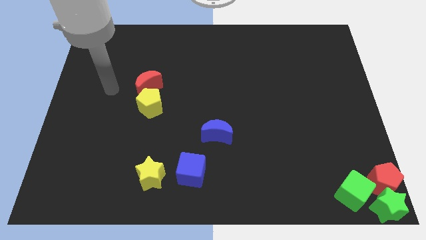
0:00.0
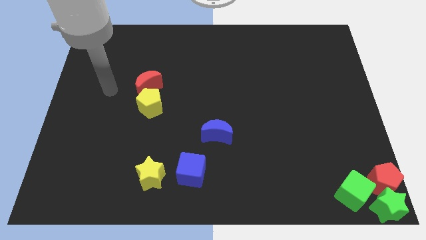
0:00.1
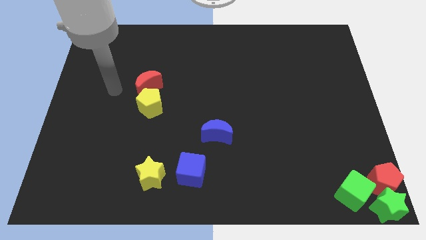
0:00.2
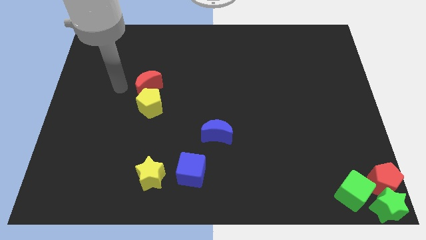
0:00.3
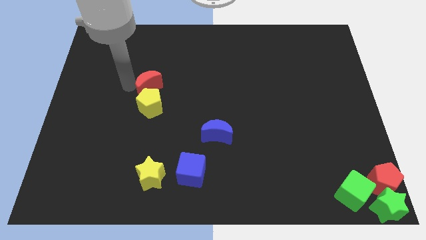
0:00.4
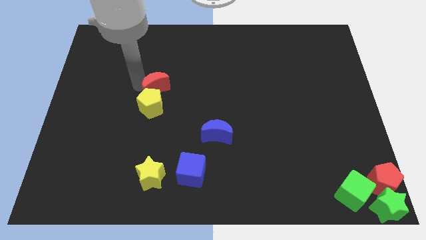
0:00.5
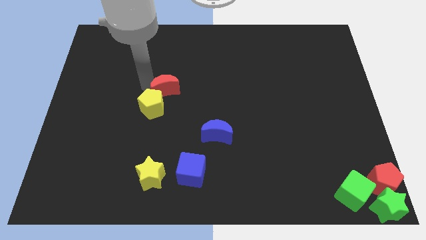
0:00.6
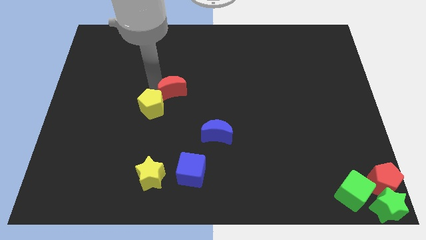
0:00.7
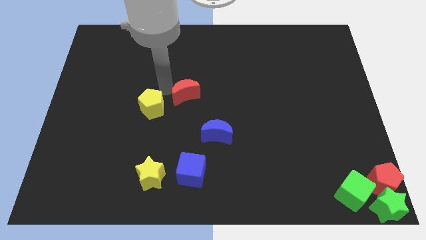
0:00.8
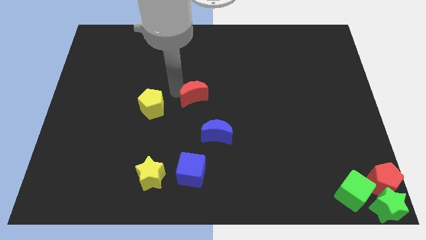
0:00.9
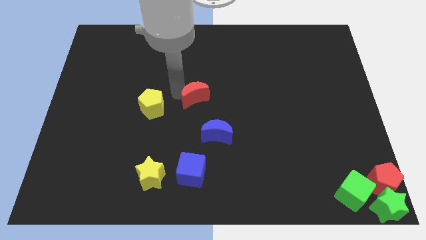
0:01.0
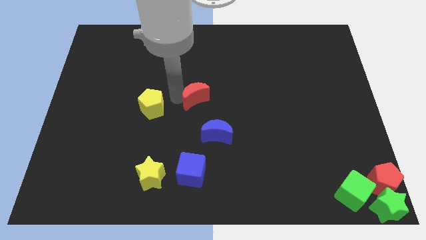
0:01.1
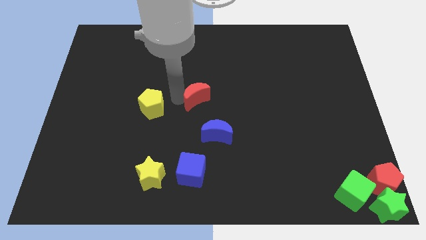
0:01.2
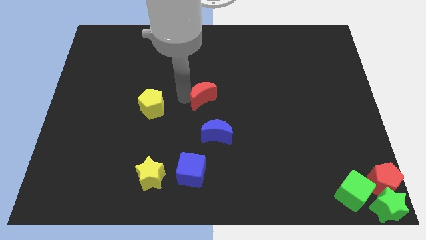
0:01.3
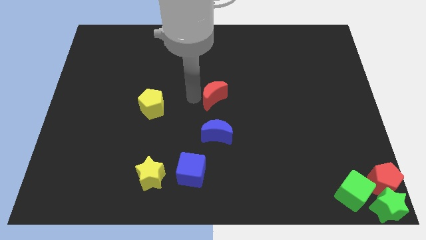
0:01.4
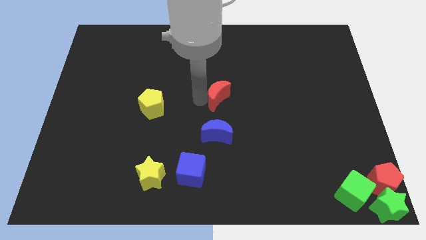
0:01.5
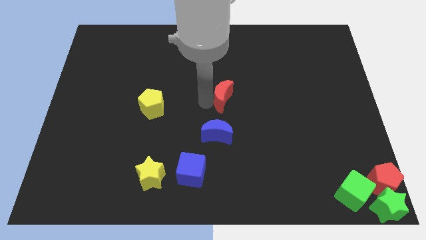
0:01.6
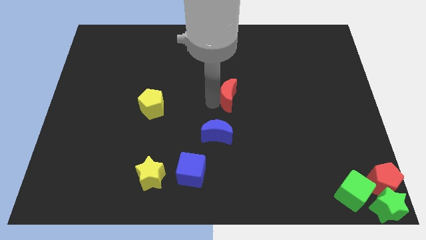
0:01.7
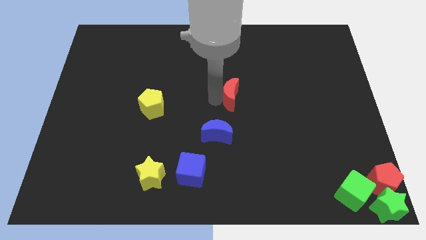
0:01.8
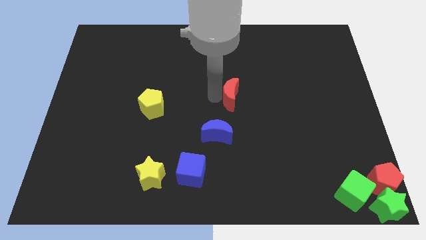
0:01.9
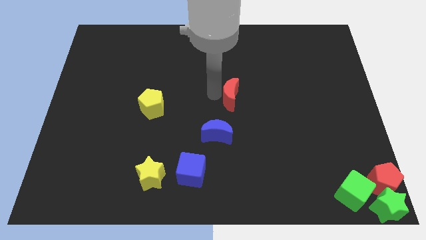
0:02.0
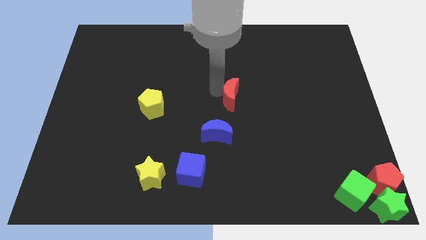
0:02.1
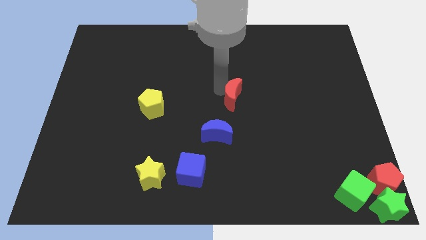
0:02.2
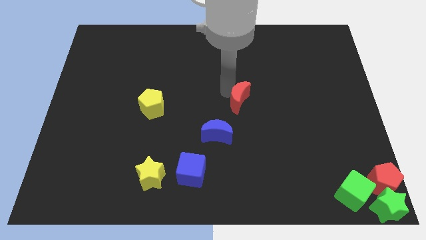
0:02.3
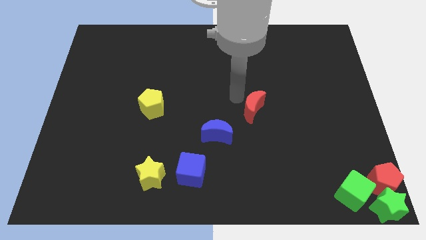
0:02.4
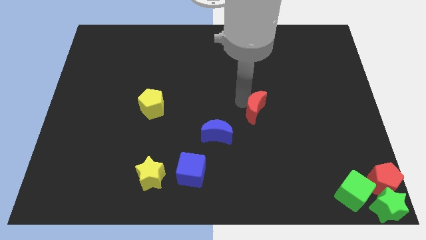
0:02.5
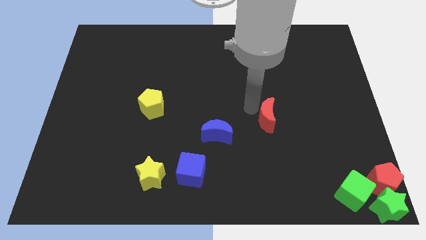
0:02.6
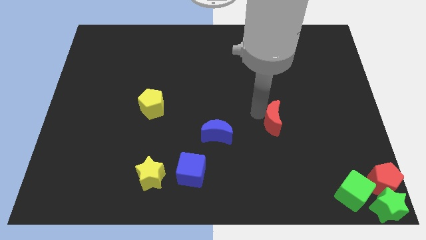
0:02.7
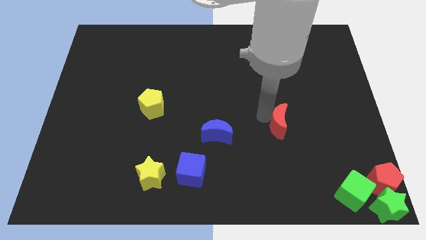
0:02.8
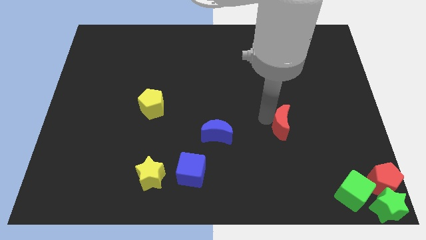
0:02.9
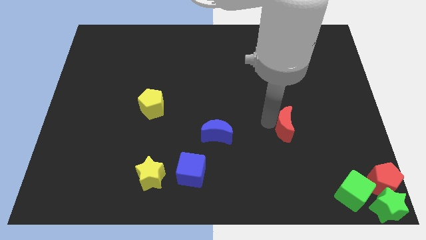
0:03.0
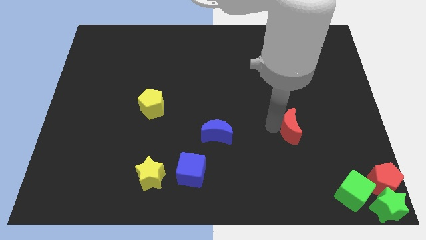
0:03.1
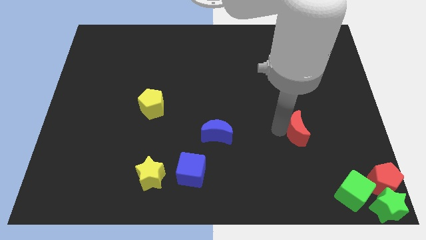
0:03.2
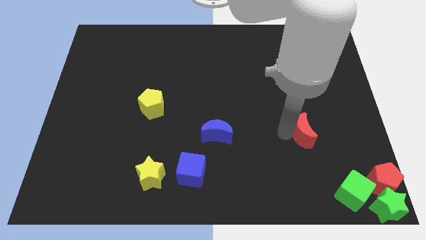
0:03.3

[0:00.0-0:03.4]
push the red crescent diagonal to green cube

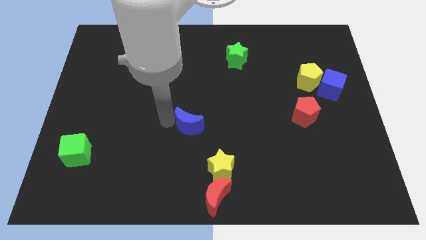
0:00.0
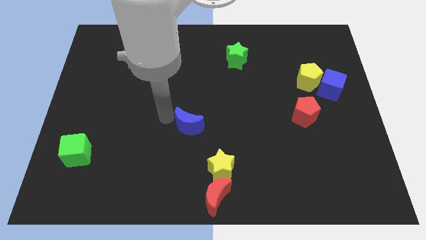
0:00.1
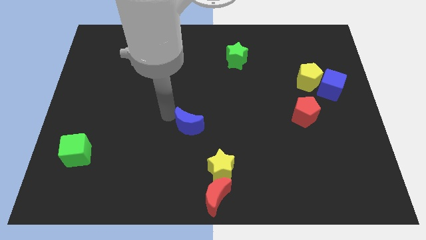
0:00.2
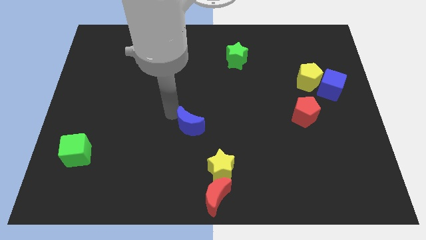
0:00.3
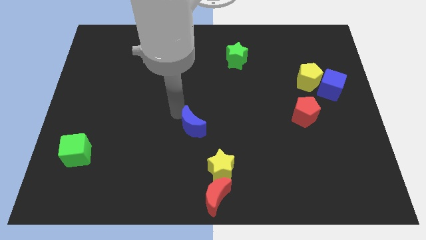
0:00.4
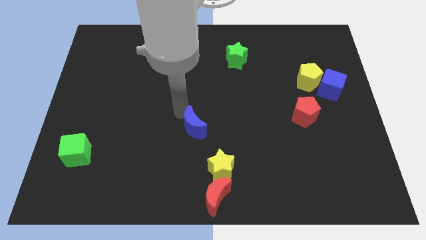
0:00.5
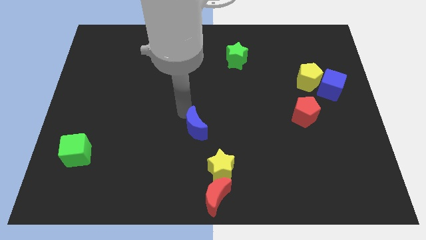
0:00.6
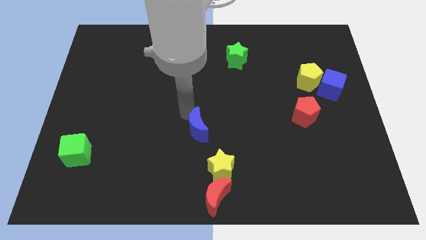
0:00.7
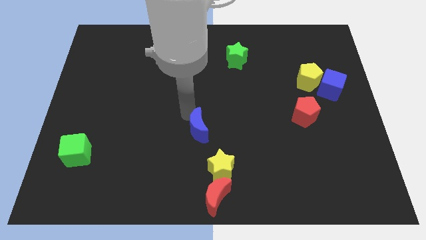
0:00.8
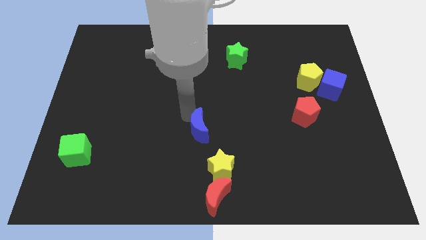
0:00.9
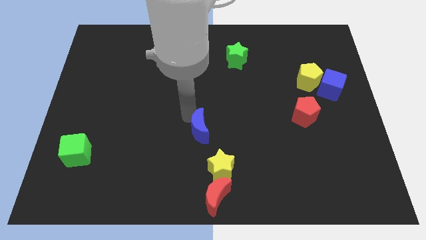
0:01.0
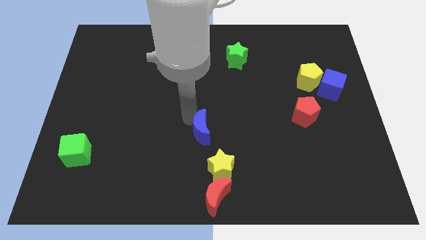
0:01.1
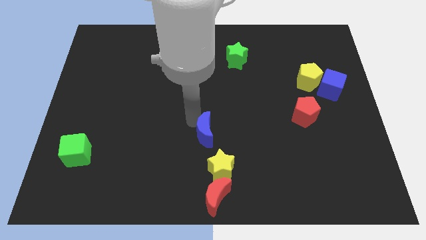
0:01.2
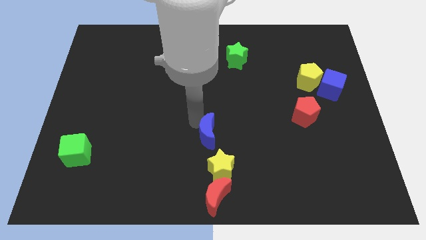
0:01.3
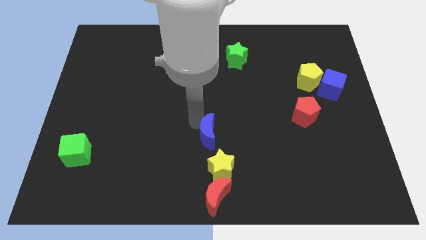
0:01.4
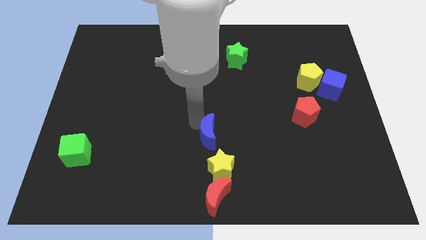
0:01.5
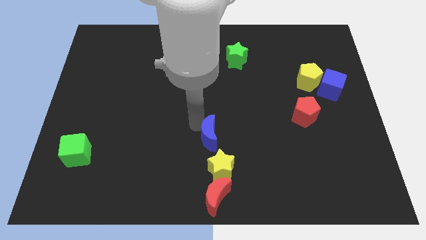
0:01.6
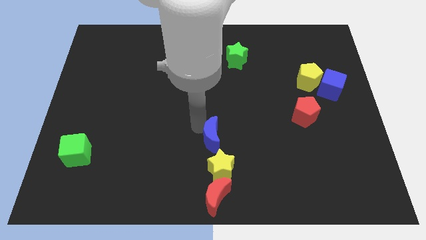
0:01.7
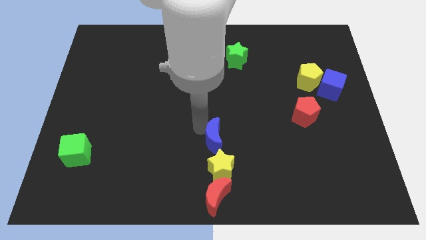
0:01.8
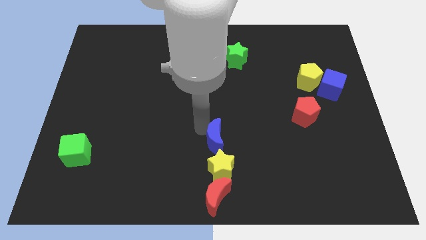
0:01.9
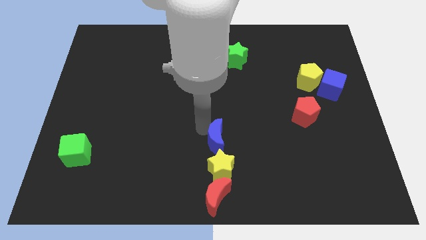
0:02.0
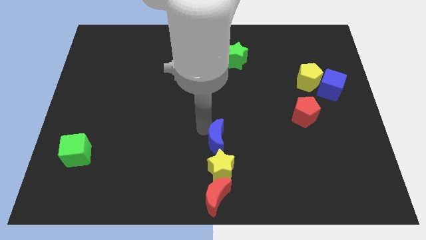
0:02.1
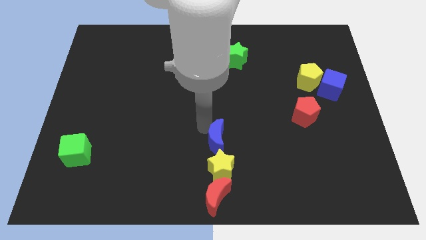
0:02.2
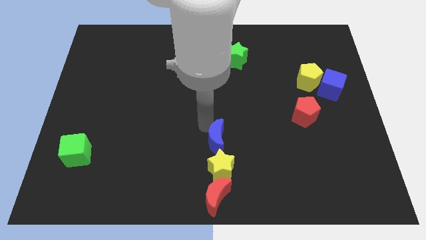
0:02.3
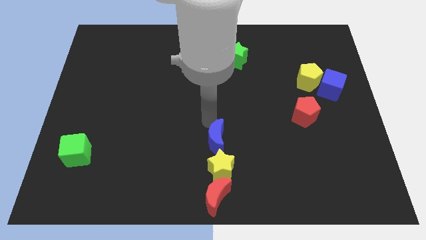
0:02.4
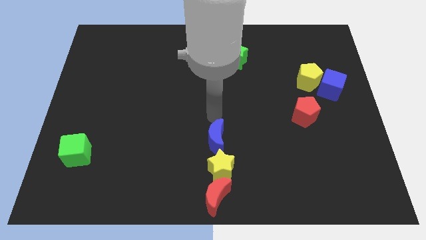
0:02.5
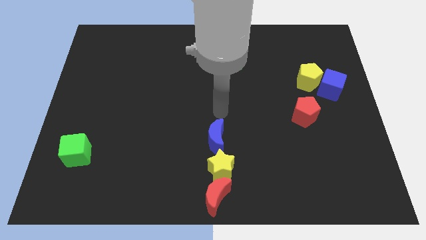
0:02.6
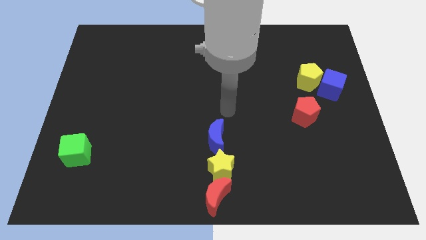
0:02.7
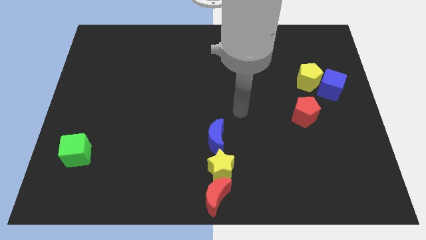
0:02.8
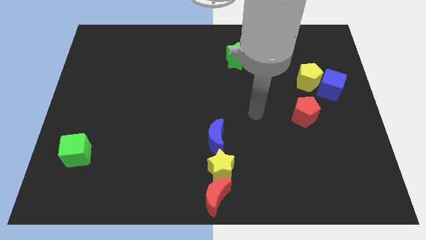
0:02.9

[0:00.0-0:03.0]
place blue moon above yellow star

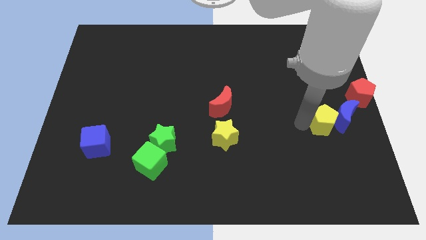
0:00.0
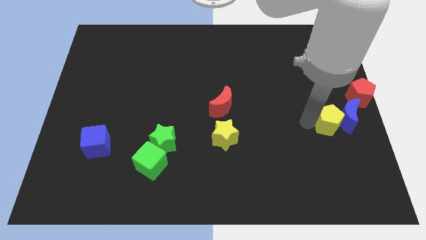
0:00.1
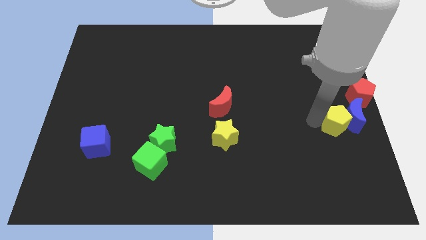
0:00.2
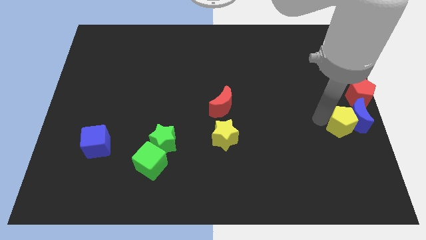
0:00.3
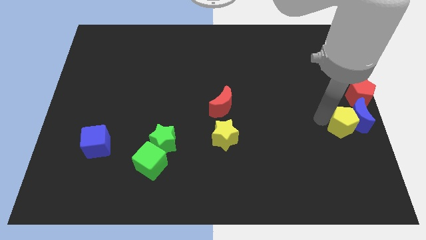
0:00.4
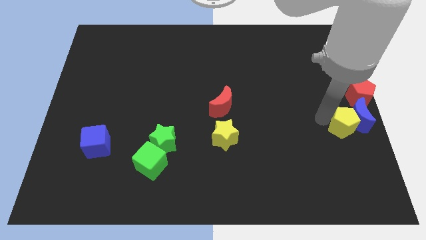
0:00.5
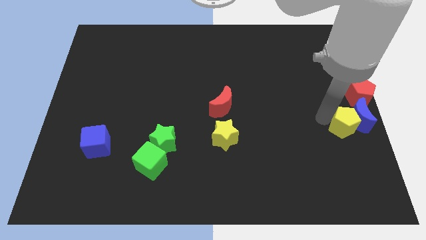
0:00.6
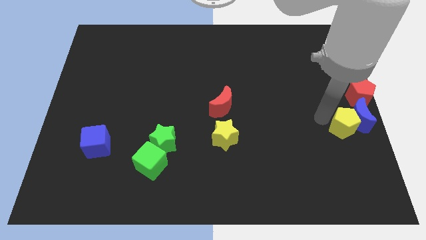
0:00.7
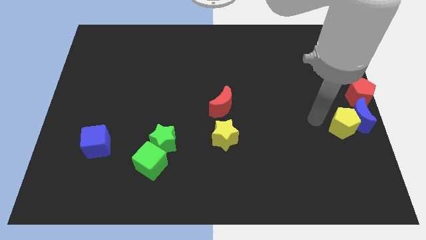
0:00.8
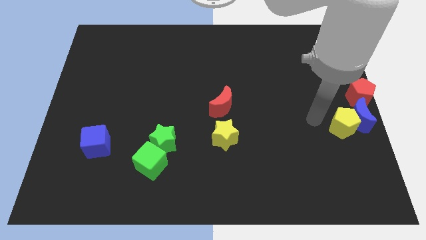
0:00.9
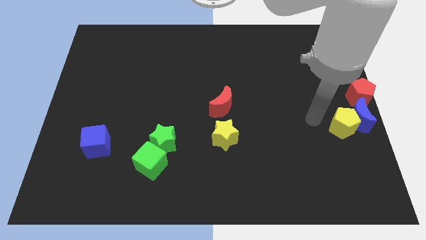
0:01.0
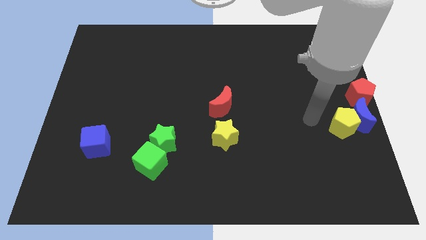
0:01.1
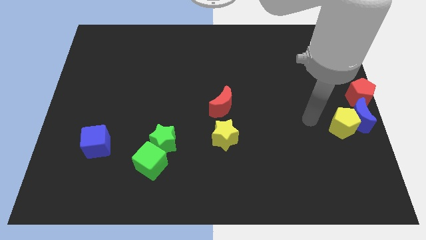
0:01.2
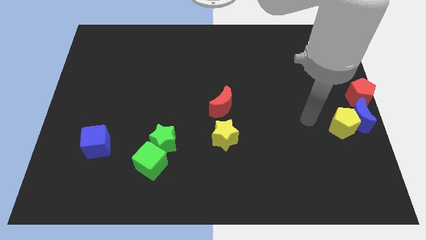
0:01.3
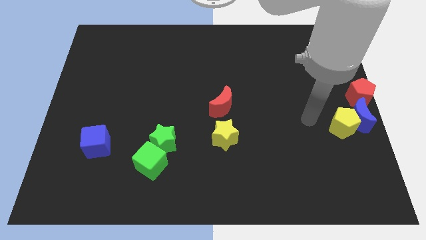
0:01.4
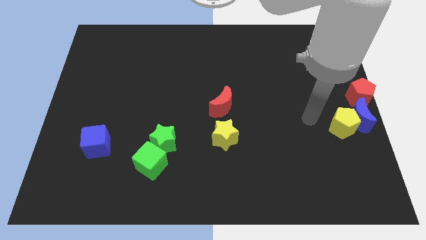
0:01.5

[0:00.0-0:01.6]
push the yellow pentagon along with the blue crescent to the right middle side of the board

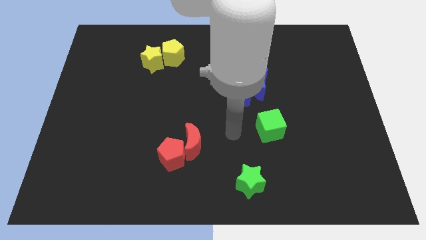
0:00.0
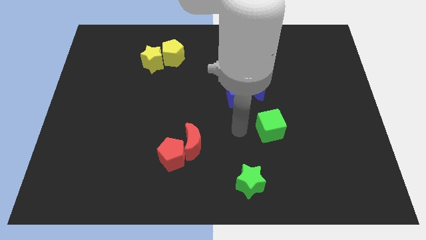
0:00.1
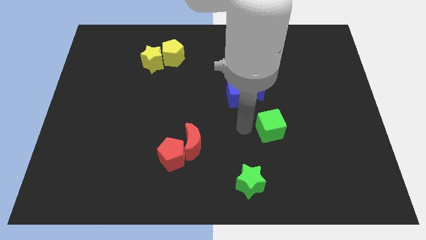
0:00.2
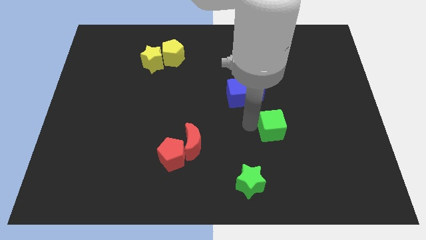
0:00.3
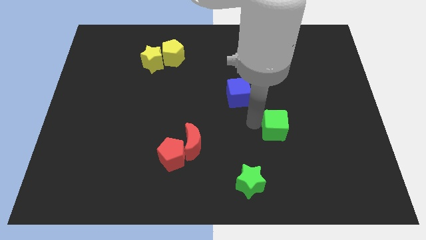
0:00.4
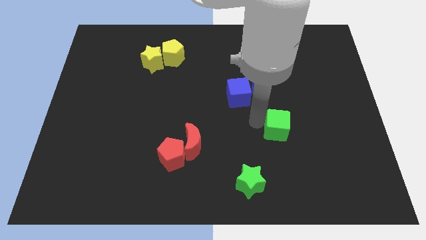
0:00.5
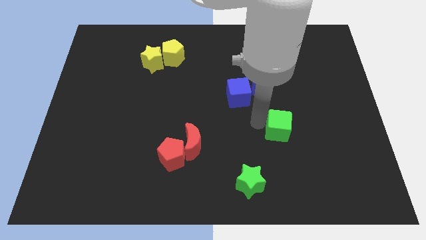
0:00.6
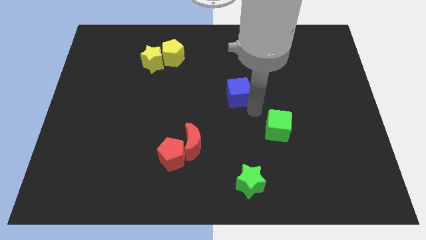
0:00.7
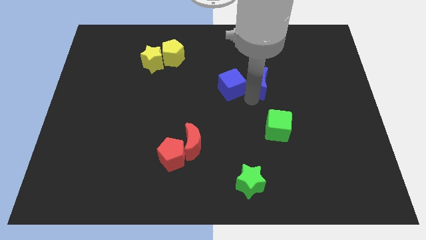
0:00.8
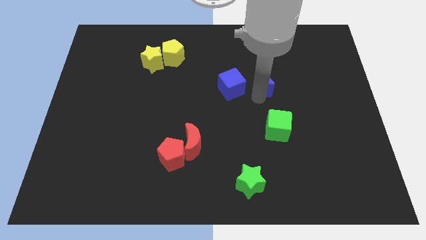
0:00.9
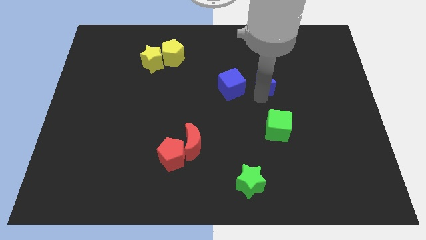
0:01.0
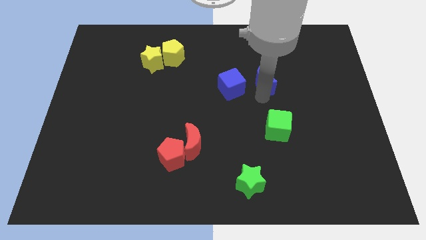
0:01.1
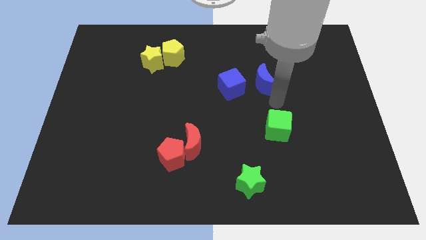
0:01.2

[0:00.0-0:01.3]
go and separate the two blue objects
